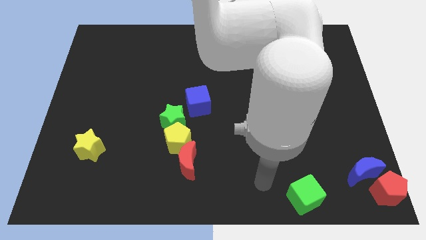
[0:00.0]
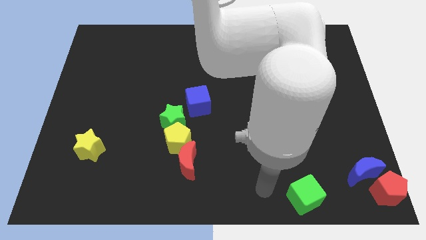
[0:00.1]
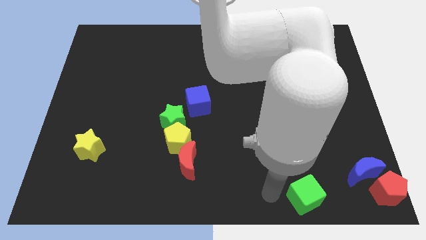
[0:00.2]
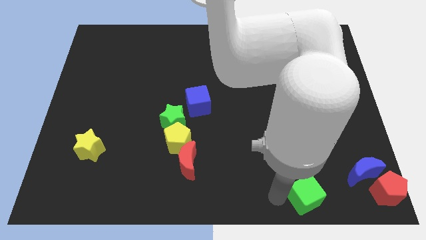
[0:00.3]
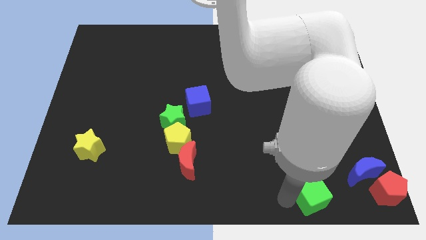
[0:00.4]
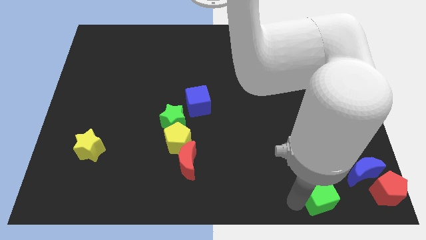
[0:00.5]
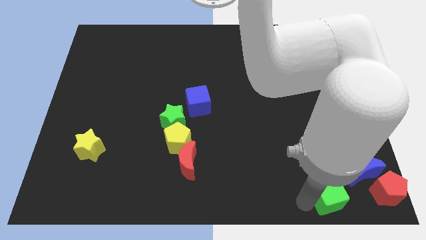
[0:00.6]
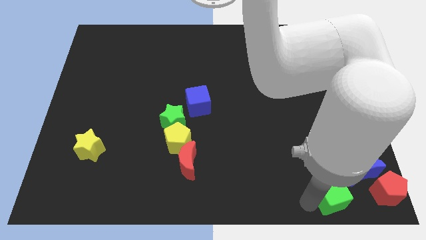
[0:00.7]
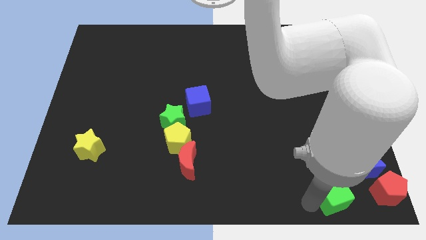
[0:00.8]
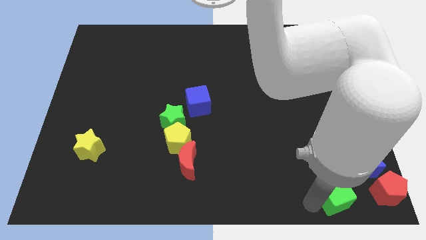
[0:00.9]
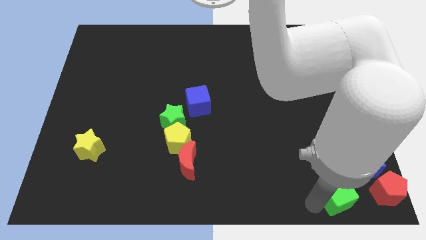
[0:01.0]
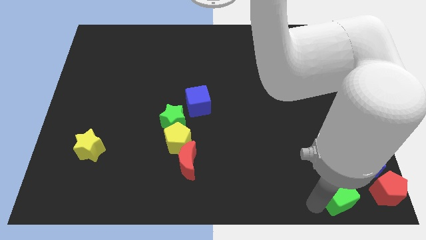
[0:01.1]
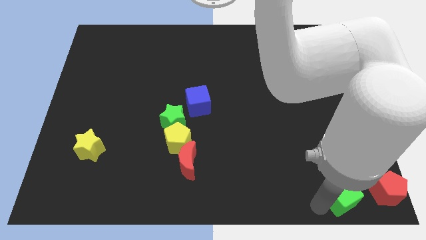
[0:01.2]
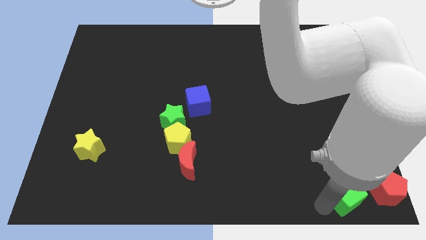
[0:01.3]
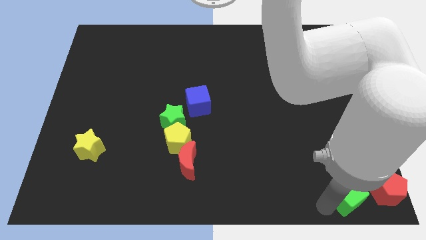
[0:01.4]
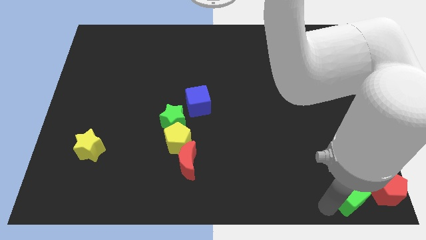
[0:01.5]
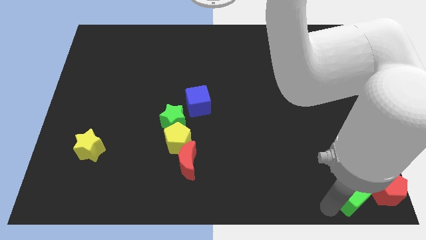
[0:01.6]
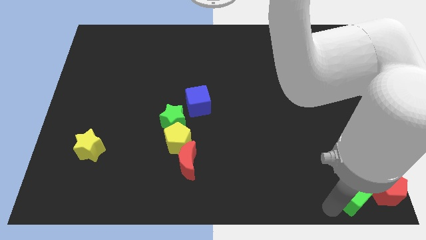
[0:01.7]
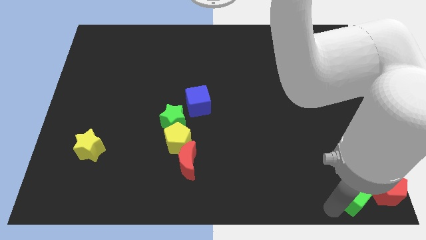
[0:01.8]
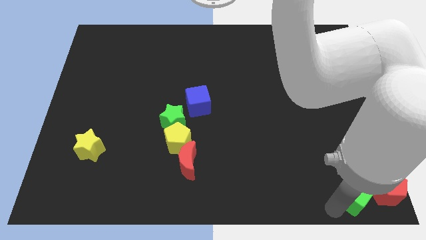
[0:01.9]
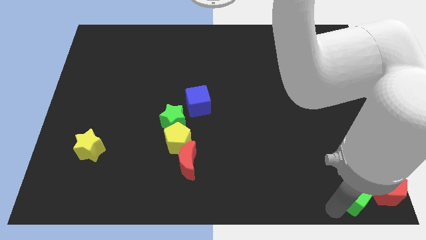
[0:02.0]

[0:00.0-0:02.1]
move the green cube close to the red pentagon

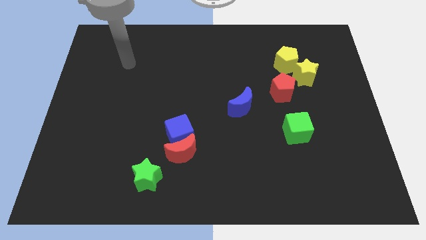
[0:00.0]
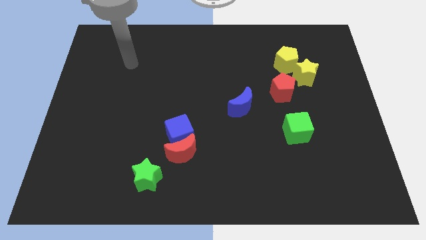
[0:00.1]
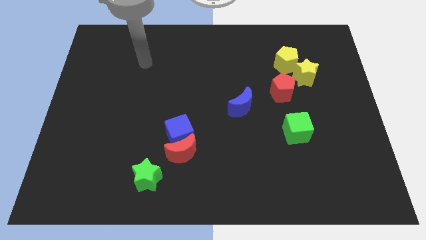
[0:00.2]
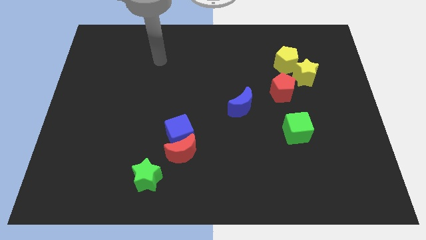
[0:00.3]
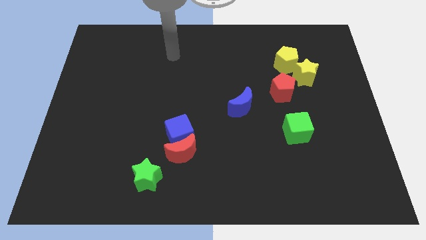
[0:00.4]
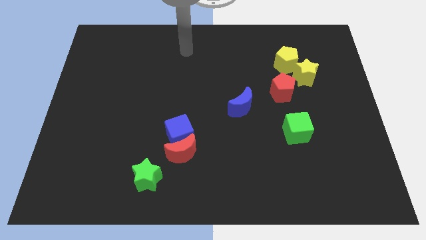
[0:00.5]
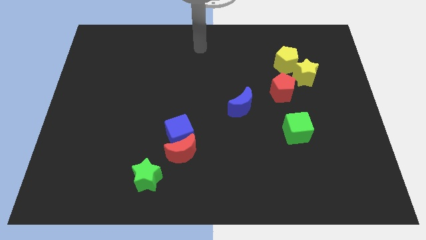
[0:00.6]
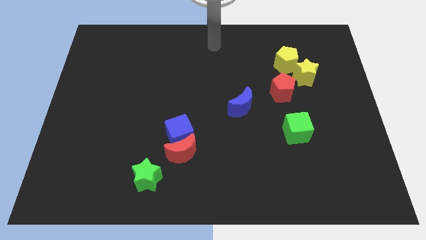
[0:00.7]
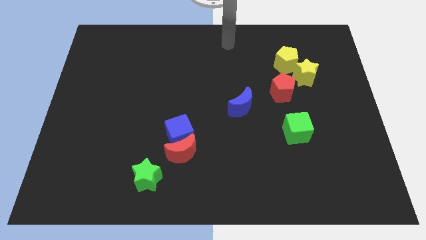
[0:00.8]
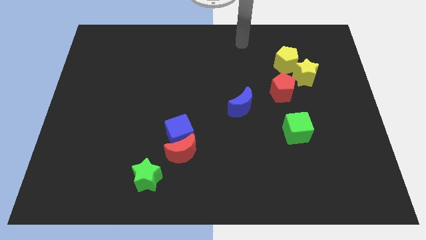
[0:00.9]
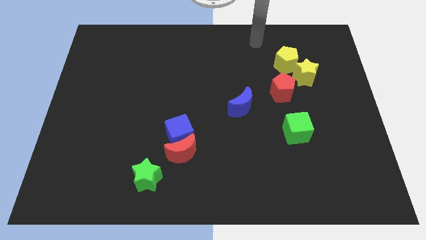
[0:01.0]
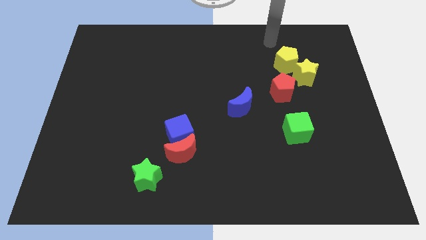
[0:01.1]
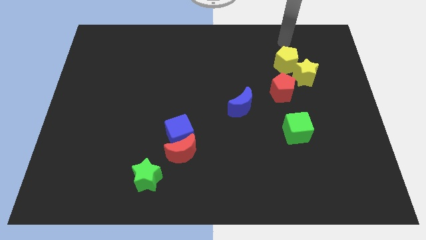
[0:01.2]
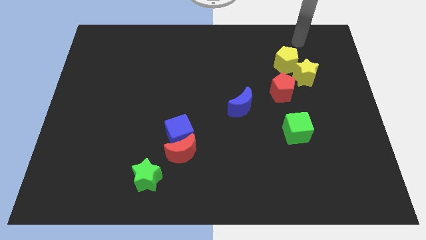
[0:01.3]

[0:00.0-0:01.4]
move your arm to the top of yellow pentagon

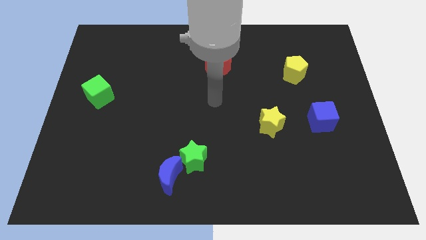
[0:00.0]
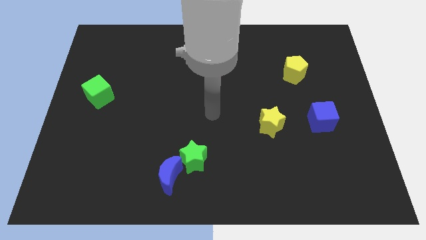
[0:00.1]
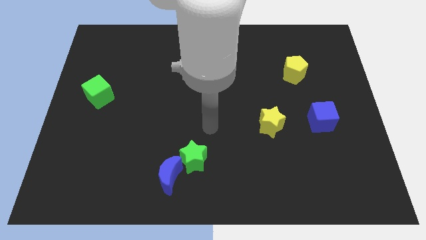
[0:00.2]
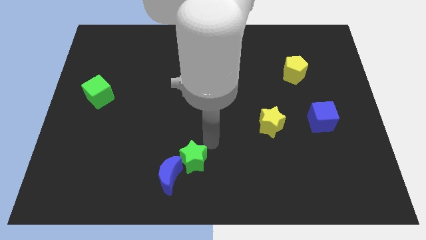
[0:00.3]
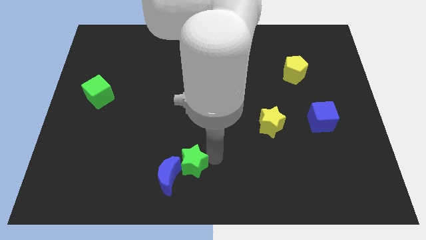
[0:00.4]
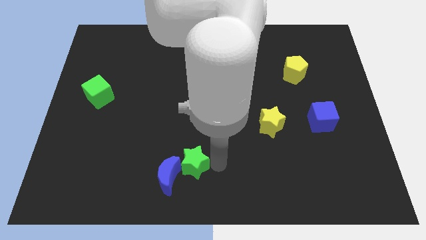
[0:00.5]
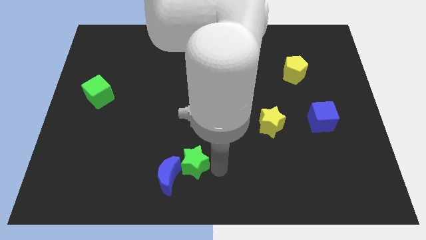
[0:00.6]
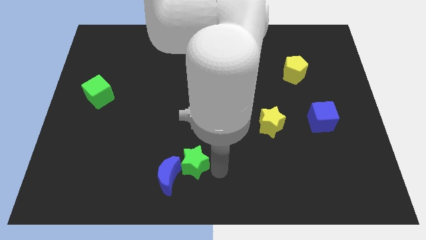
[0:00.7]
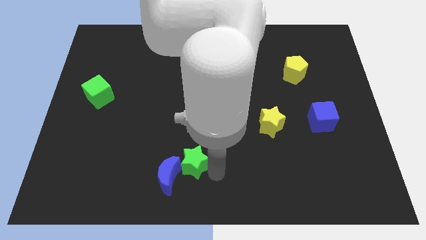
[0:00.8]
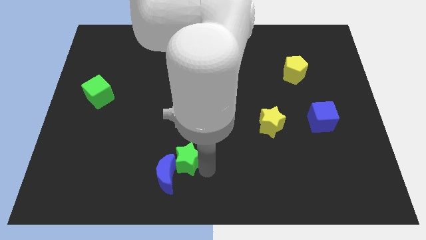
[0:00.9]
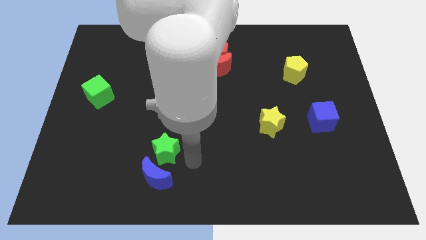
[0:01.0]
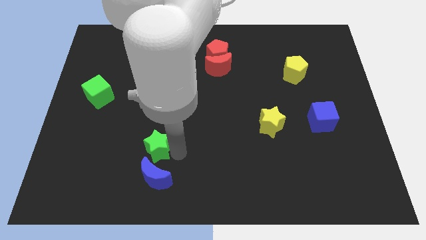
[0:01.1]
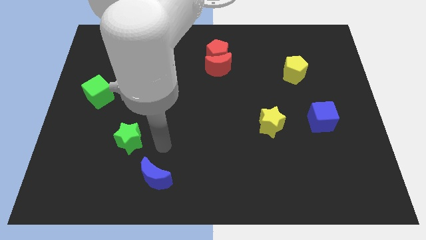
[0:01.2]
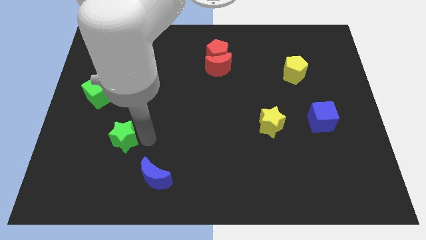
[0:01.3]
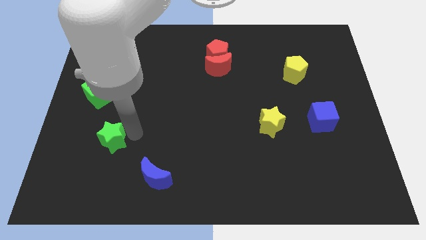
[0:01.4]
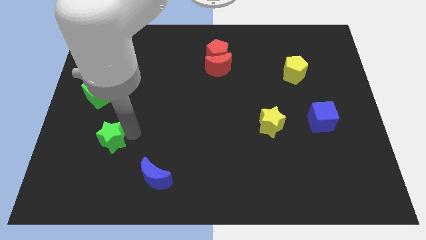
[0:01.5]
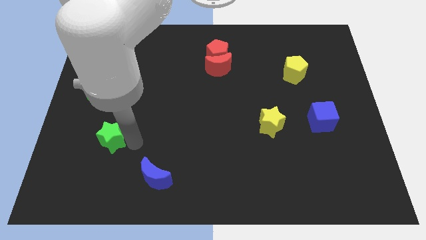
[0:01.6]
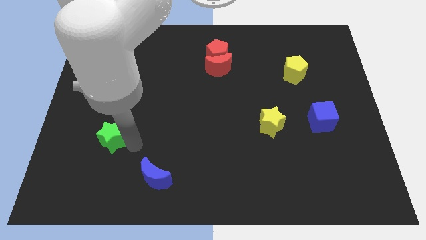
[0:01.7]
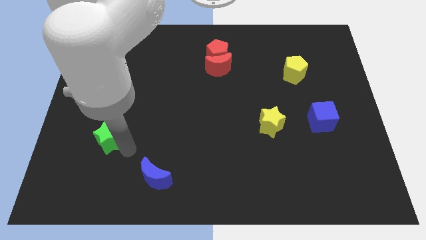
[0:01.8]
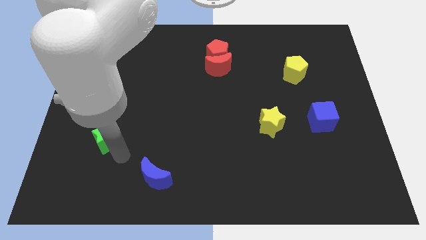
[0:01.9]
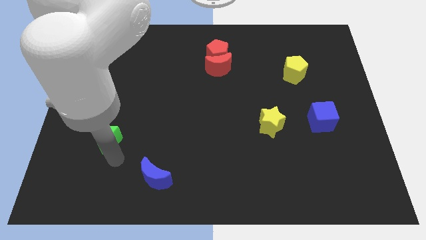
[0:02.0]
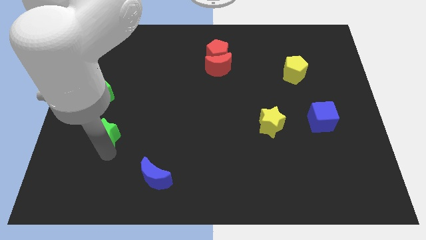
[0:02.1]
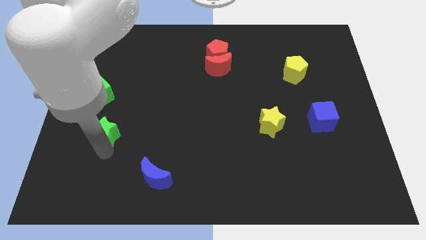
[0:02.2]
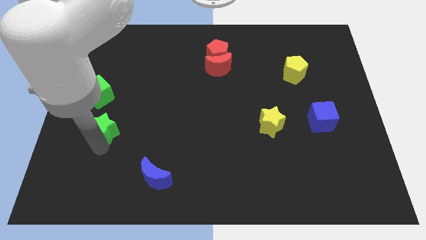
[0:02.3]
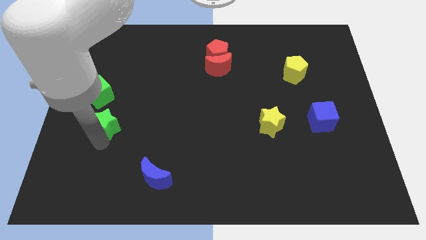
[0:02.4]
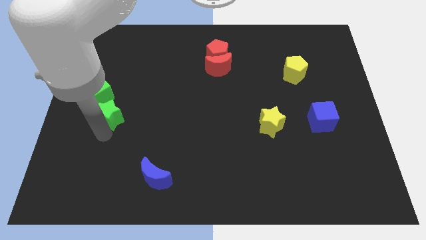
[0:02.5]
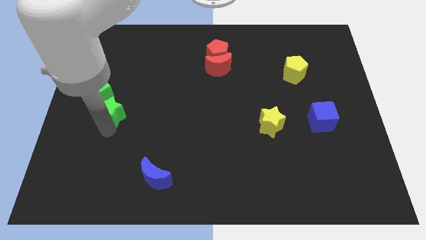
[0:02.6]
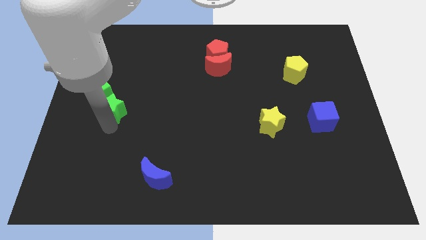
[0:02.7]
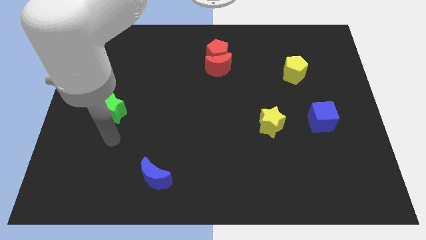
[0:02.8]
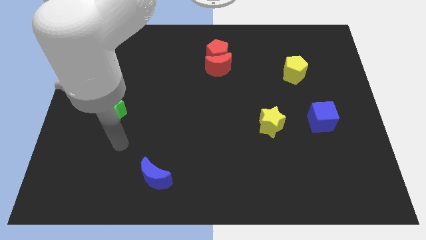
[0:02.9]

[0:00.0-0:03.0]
place the green star diagonally to the blue crescent

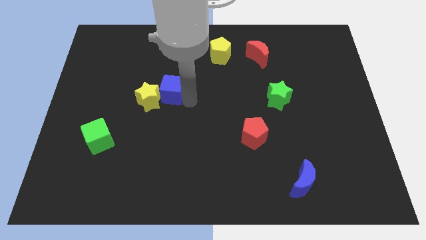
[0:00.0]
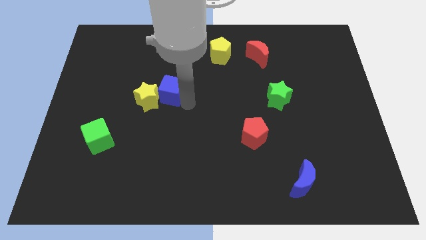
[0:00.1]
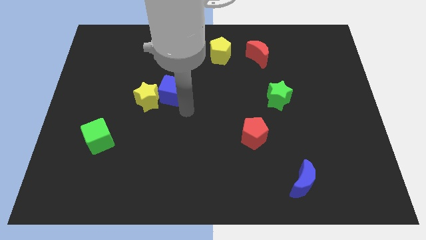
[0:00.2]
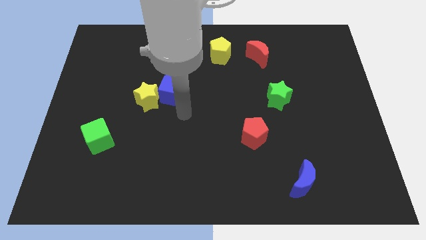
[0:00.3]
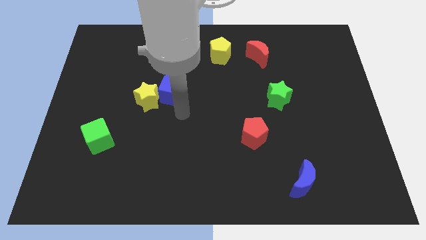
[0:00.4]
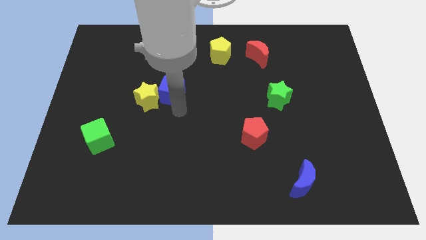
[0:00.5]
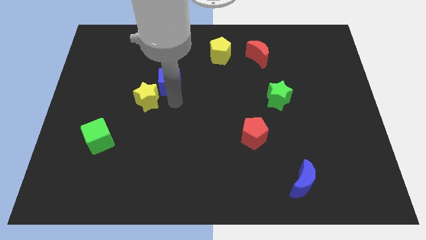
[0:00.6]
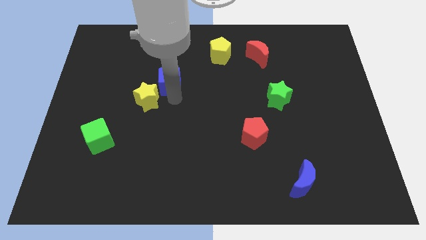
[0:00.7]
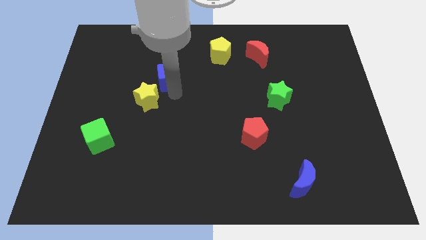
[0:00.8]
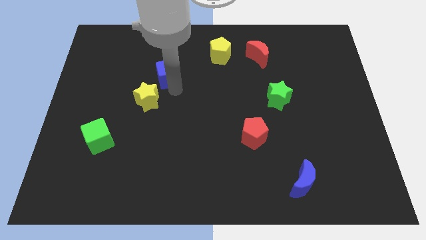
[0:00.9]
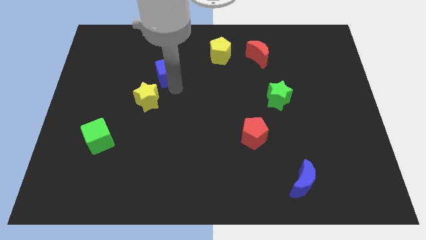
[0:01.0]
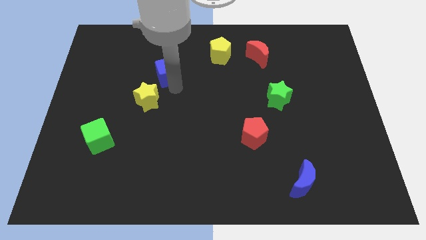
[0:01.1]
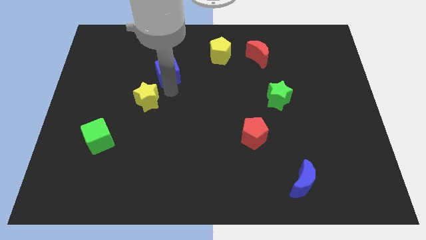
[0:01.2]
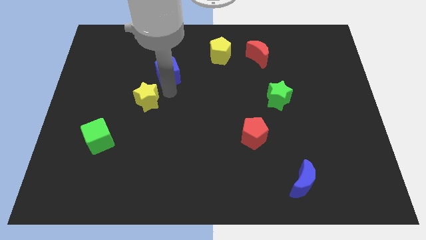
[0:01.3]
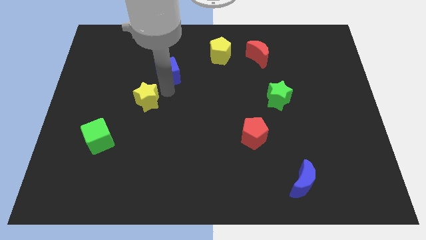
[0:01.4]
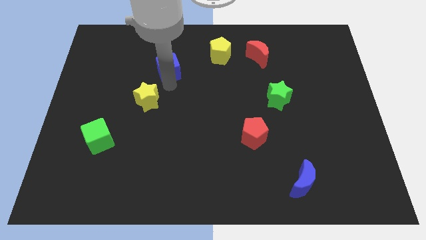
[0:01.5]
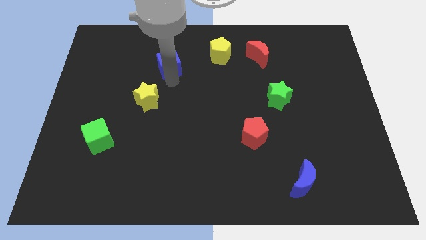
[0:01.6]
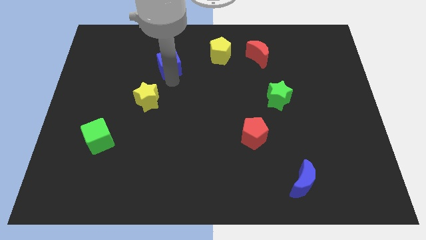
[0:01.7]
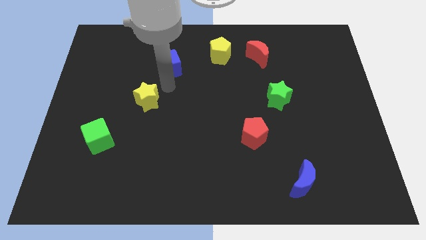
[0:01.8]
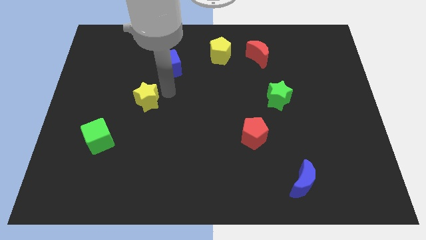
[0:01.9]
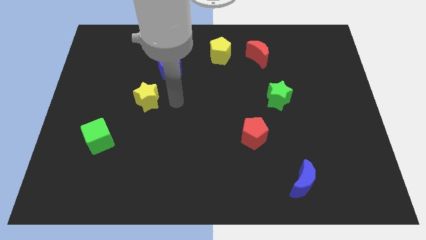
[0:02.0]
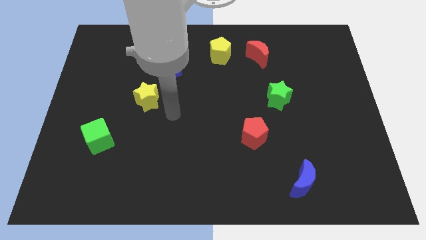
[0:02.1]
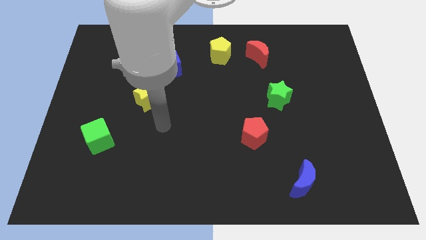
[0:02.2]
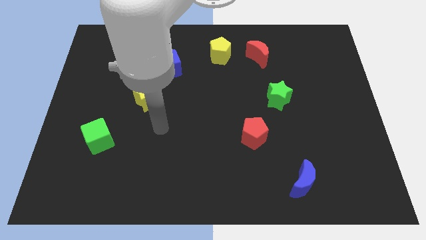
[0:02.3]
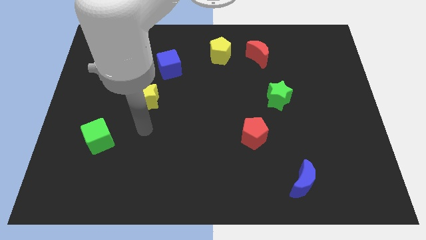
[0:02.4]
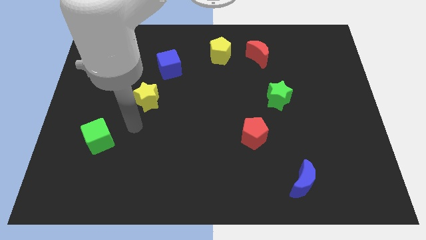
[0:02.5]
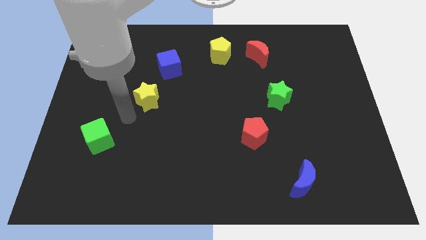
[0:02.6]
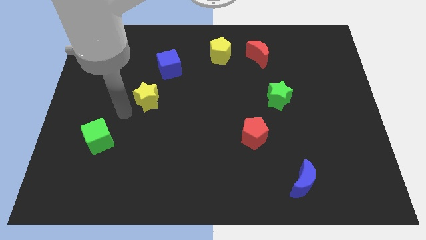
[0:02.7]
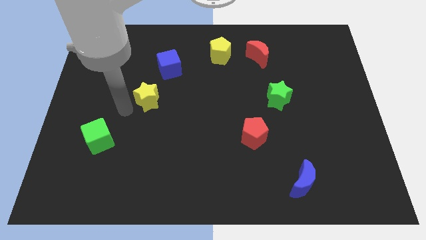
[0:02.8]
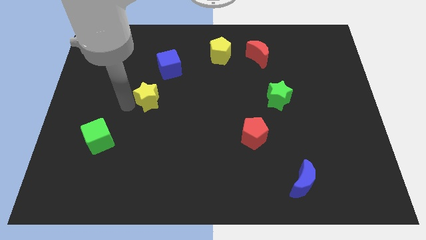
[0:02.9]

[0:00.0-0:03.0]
move the blue cube away from the yellow star
